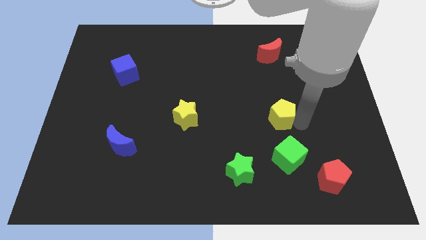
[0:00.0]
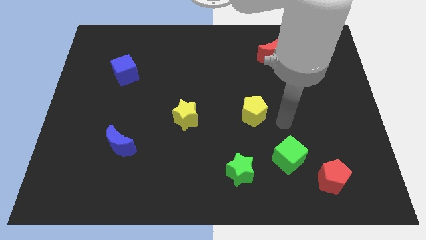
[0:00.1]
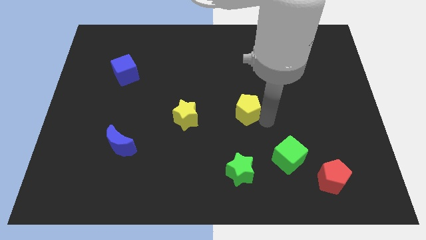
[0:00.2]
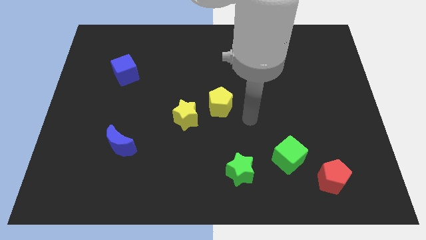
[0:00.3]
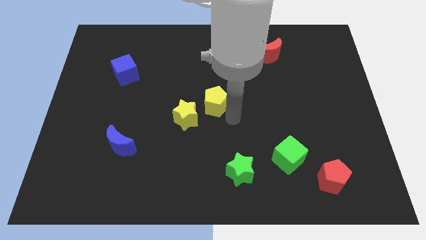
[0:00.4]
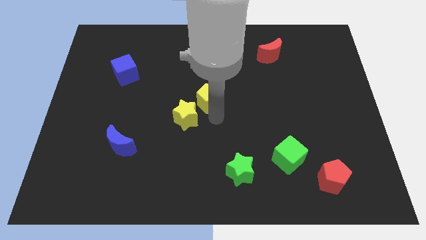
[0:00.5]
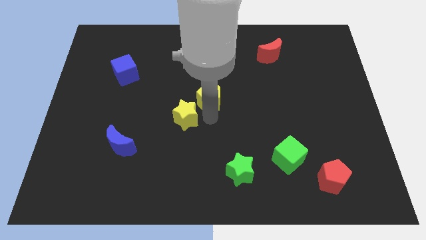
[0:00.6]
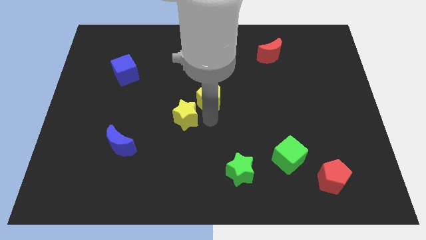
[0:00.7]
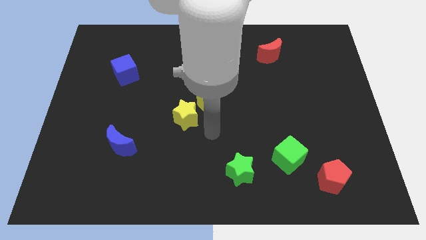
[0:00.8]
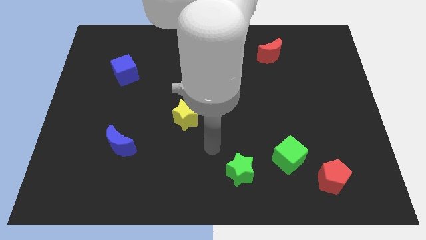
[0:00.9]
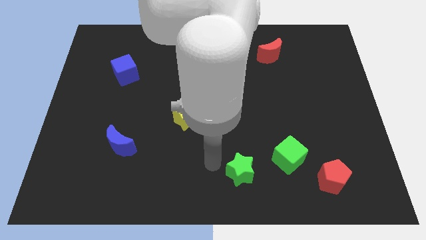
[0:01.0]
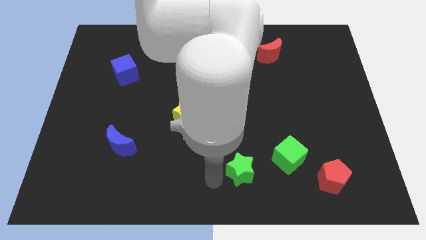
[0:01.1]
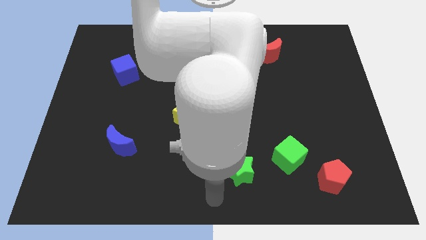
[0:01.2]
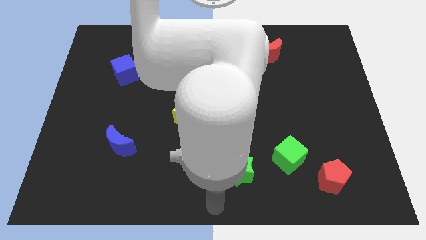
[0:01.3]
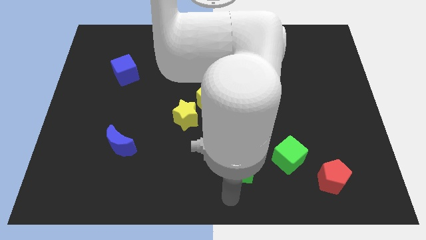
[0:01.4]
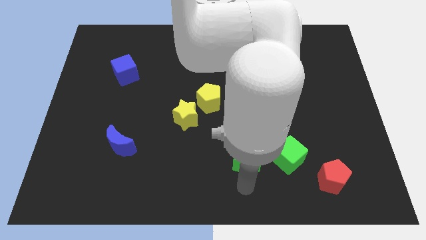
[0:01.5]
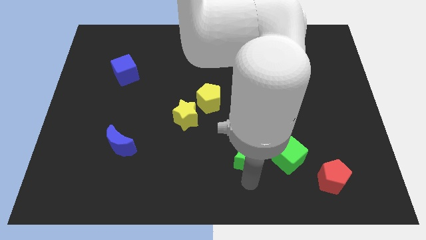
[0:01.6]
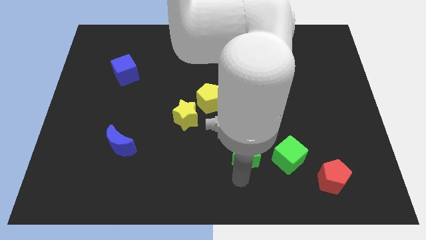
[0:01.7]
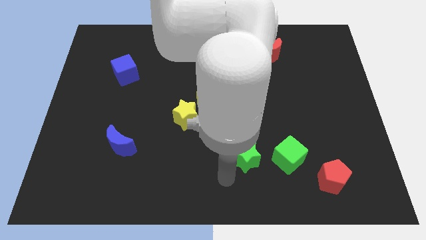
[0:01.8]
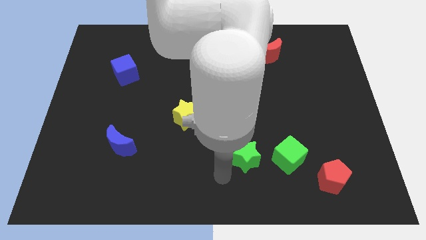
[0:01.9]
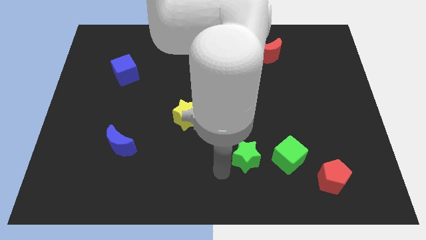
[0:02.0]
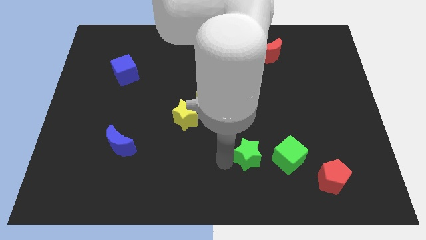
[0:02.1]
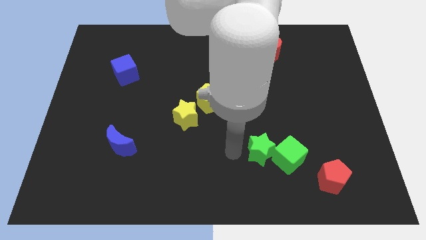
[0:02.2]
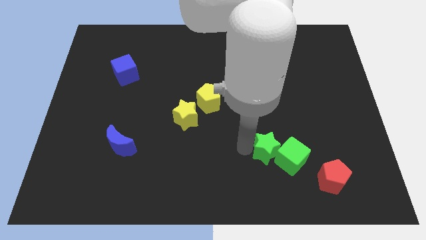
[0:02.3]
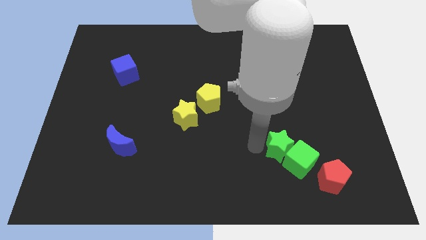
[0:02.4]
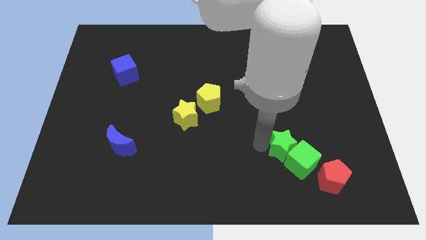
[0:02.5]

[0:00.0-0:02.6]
place the yellow and green blocks together

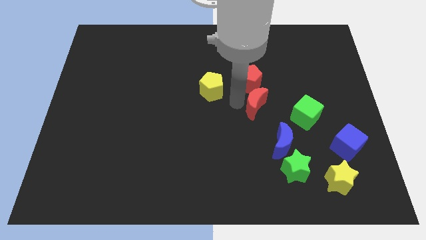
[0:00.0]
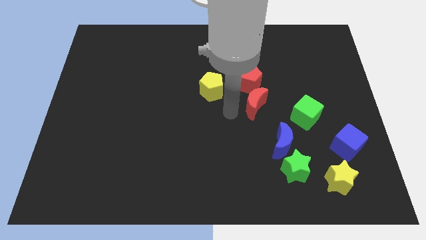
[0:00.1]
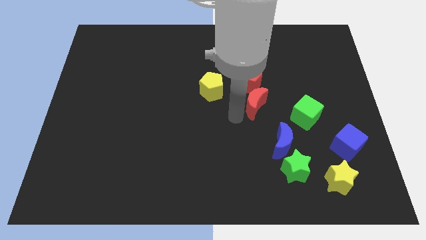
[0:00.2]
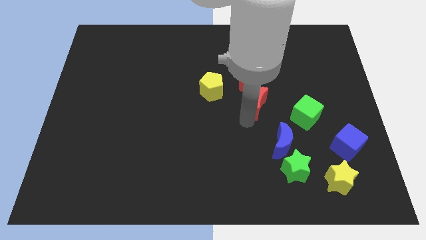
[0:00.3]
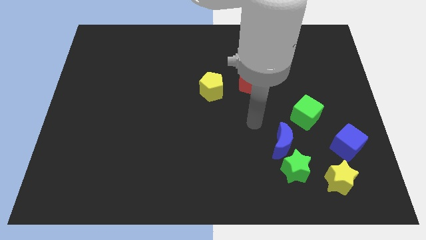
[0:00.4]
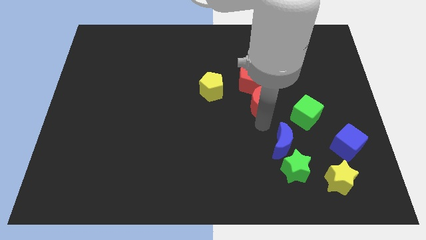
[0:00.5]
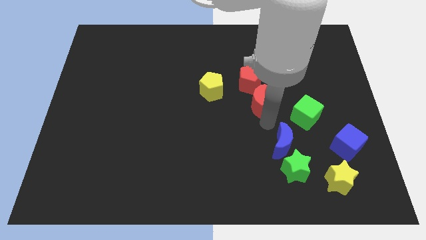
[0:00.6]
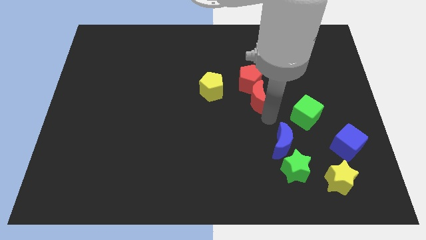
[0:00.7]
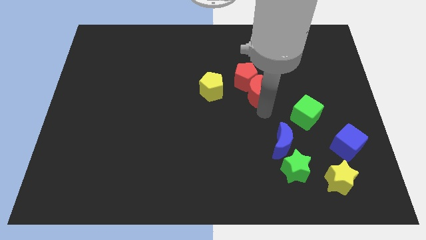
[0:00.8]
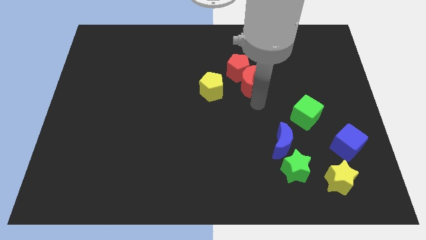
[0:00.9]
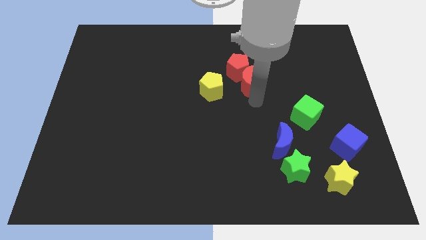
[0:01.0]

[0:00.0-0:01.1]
push crescent slightly upwards along with the red pentagon

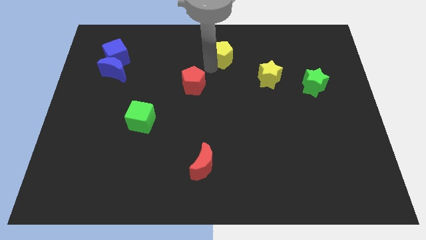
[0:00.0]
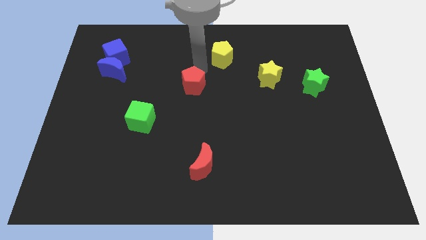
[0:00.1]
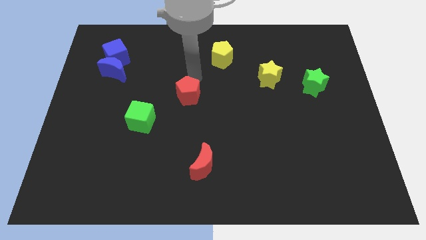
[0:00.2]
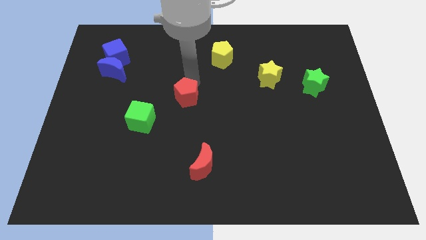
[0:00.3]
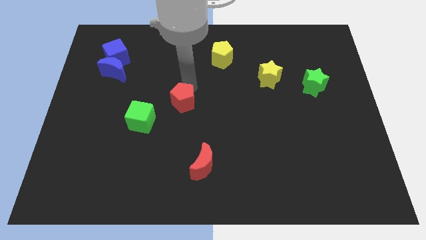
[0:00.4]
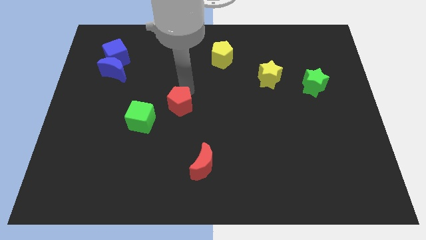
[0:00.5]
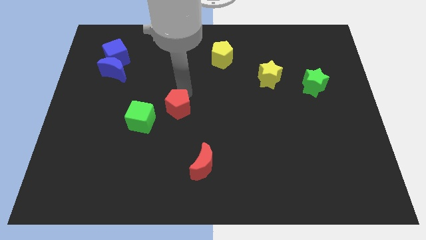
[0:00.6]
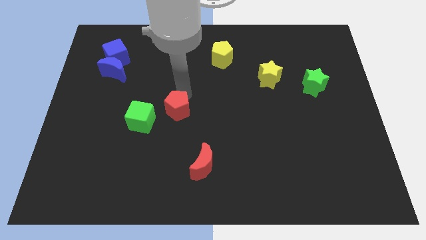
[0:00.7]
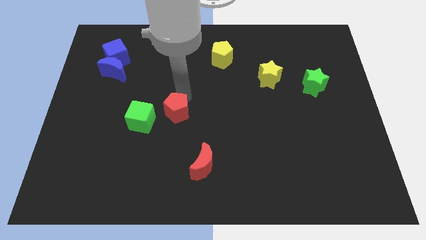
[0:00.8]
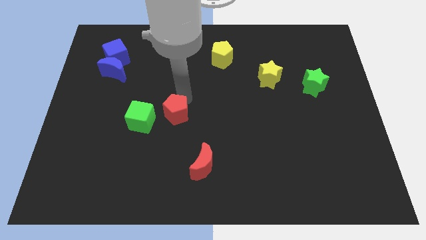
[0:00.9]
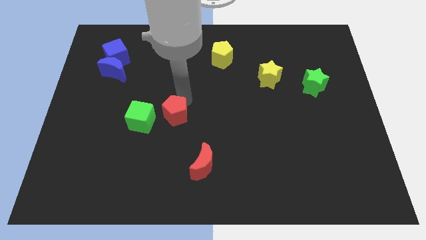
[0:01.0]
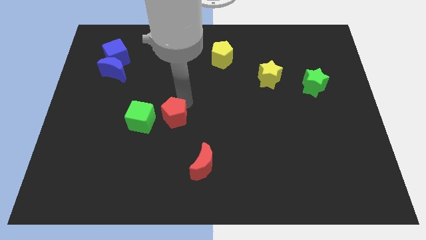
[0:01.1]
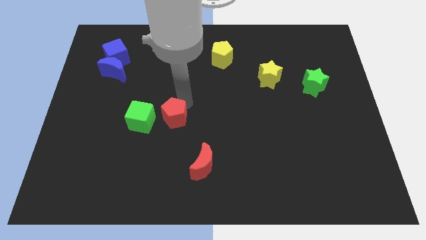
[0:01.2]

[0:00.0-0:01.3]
push the red pentagon close to the green cube

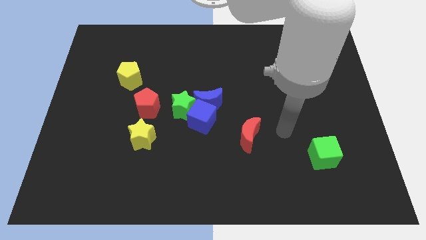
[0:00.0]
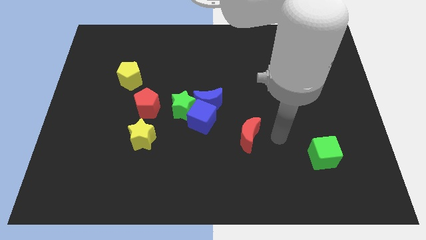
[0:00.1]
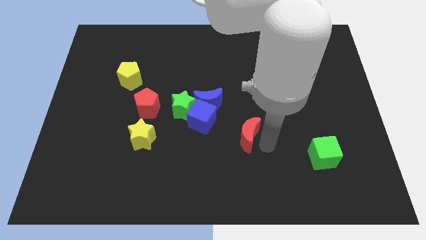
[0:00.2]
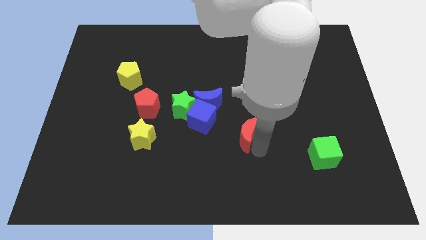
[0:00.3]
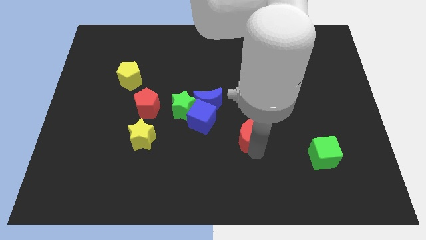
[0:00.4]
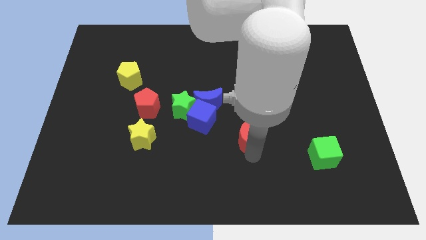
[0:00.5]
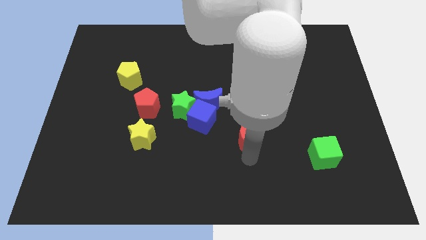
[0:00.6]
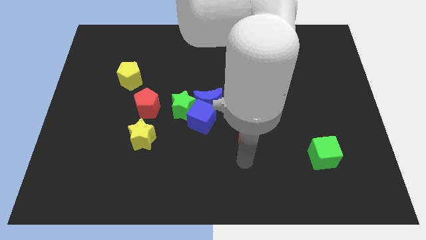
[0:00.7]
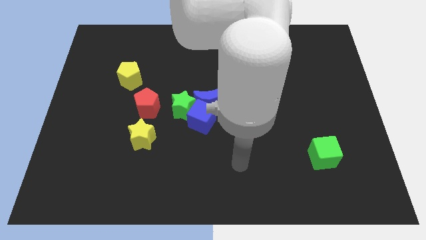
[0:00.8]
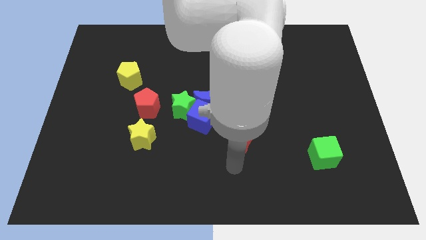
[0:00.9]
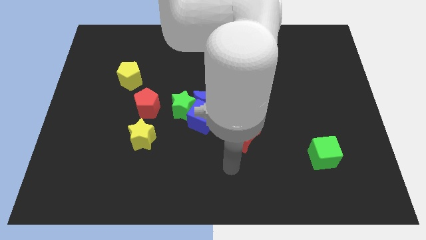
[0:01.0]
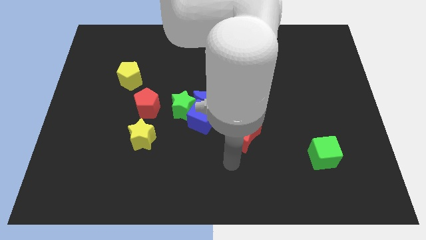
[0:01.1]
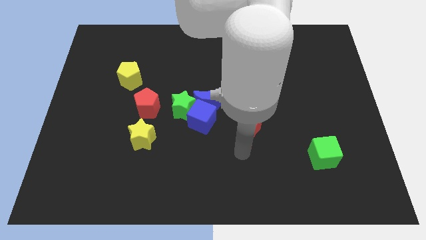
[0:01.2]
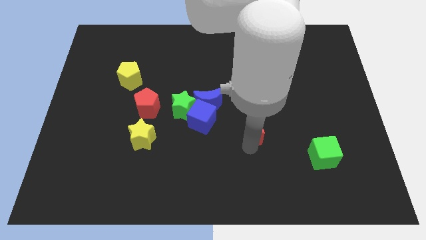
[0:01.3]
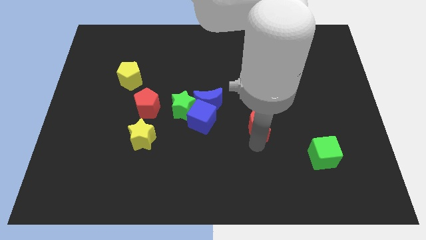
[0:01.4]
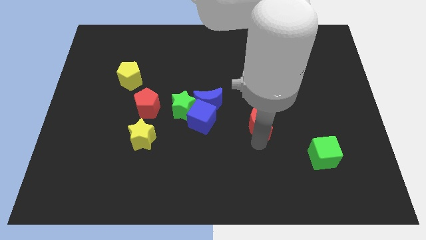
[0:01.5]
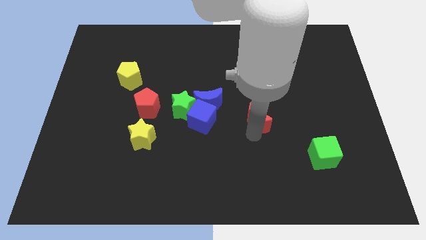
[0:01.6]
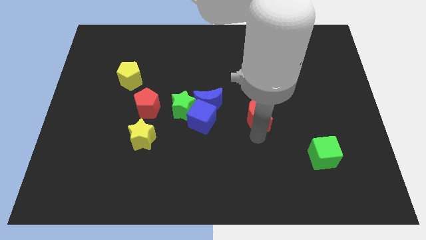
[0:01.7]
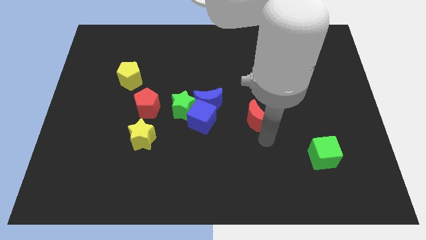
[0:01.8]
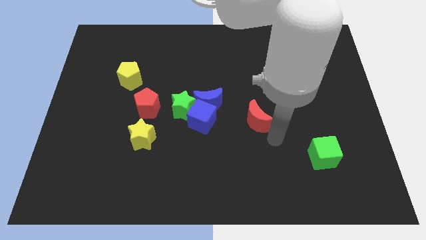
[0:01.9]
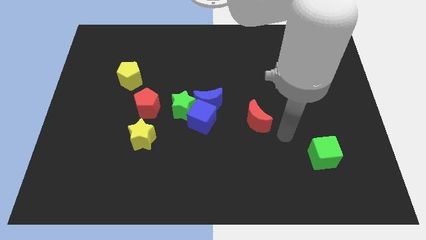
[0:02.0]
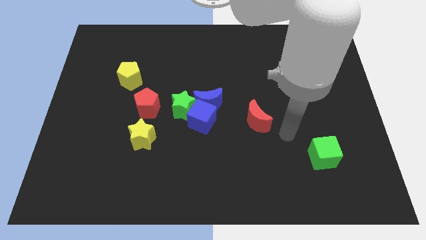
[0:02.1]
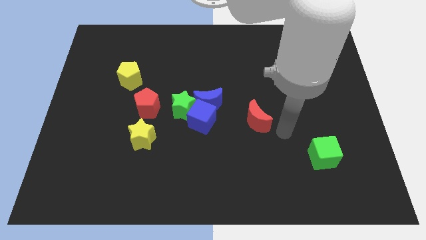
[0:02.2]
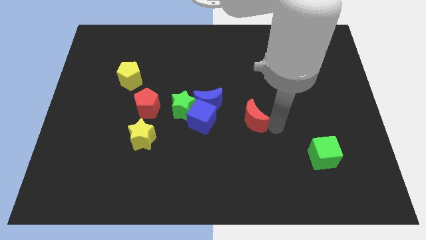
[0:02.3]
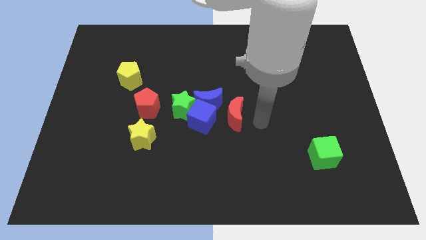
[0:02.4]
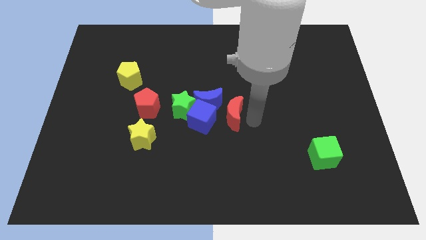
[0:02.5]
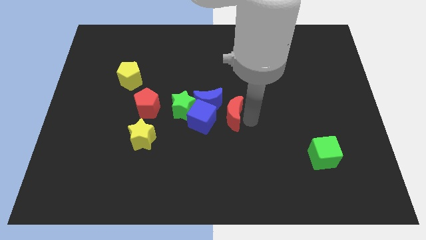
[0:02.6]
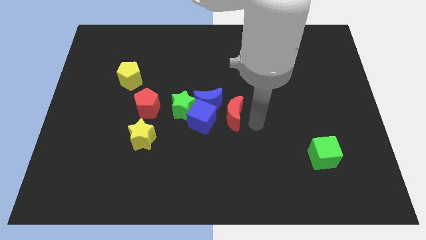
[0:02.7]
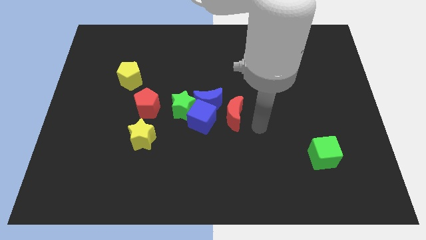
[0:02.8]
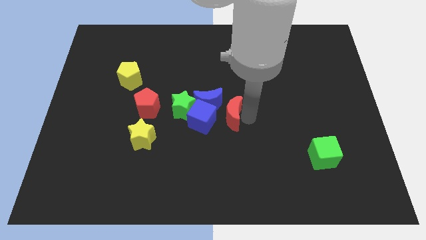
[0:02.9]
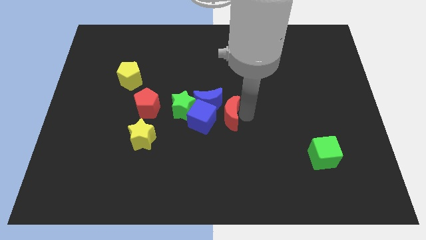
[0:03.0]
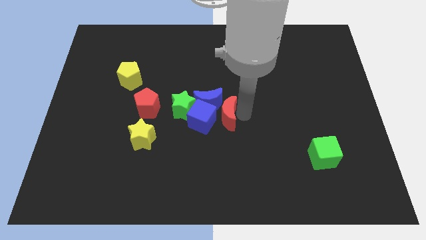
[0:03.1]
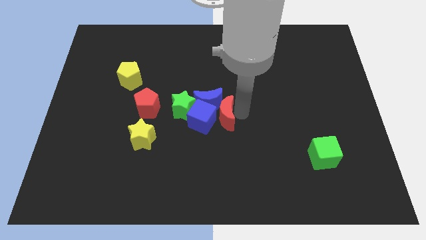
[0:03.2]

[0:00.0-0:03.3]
push the red moon to the center of the board

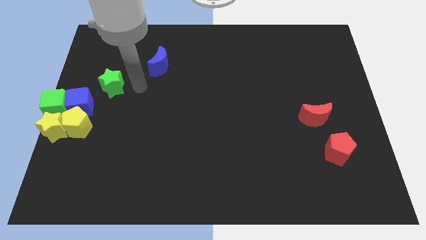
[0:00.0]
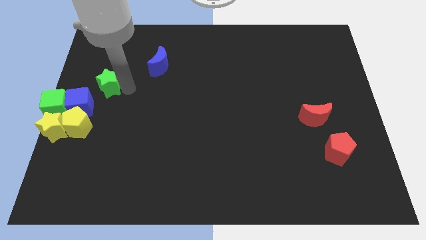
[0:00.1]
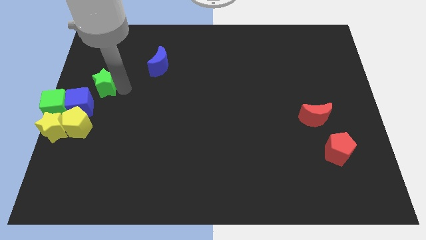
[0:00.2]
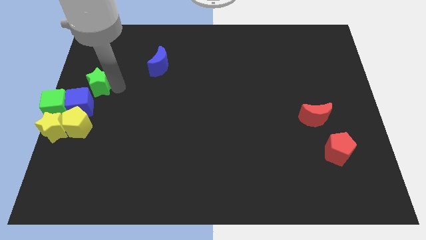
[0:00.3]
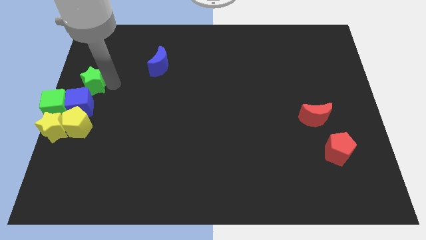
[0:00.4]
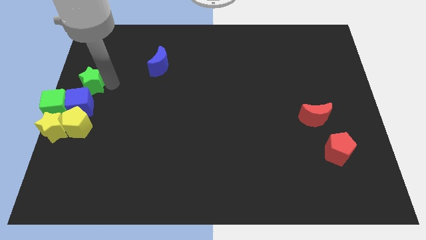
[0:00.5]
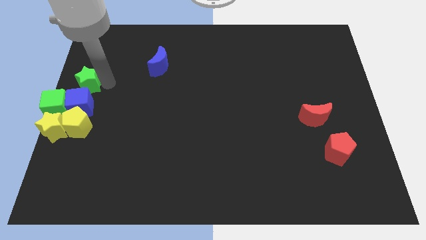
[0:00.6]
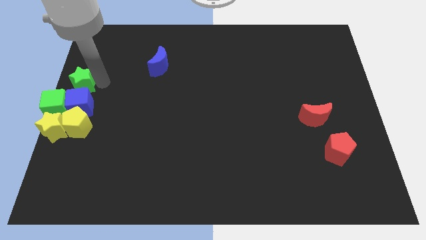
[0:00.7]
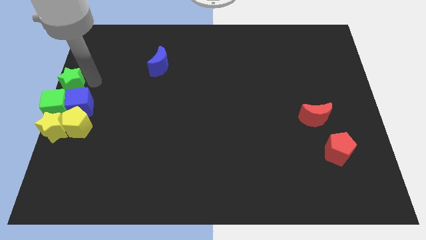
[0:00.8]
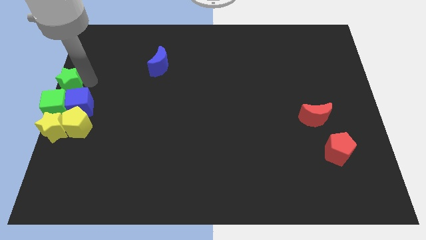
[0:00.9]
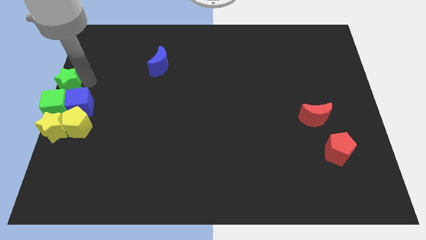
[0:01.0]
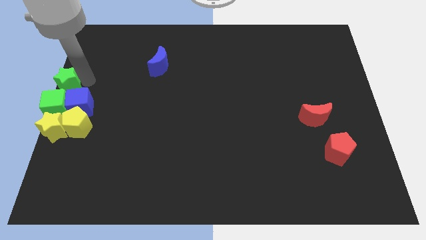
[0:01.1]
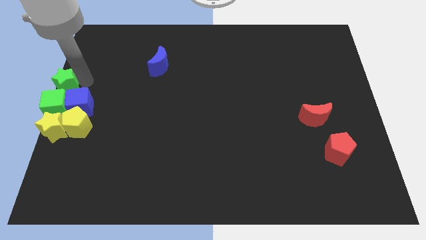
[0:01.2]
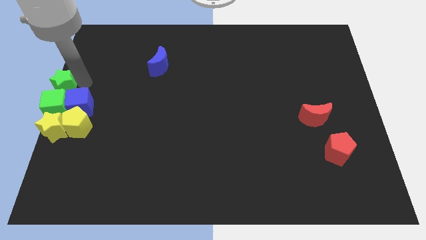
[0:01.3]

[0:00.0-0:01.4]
place green star to the top of green cube
